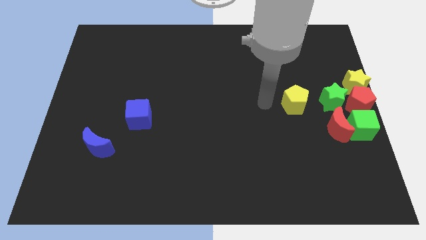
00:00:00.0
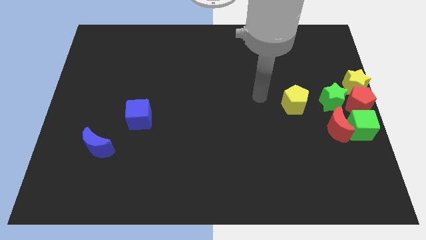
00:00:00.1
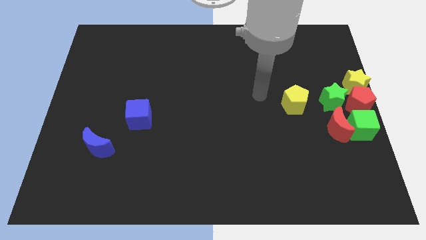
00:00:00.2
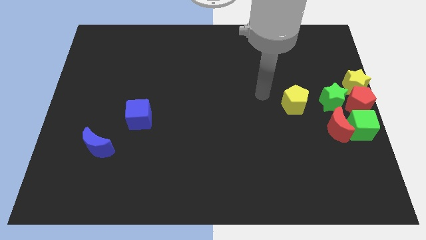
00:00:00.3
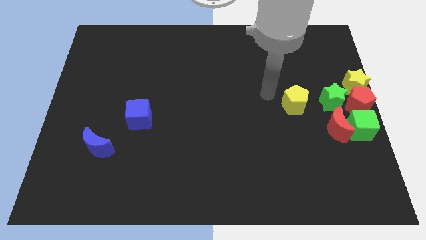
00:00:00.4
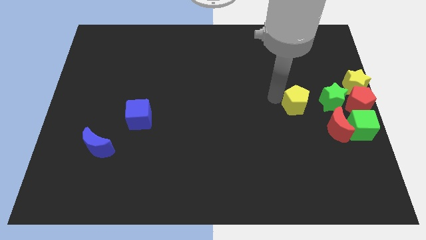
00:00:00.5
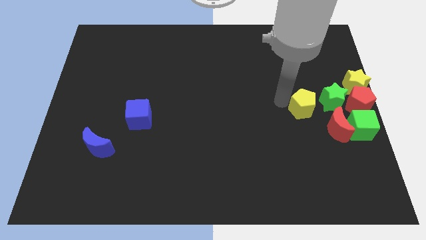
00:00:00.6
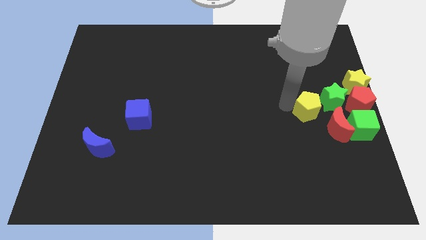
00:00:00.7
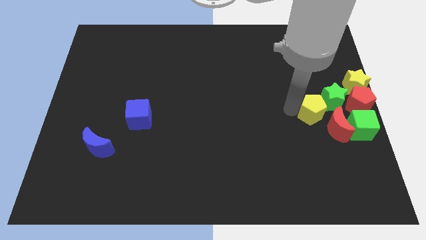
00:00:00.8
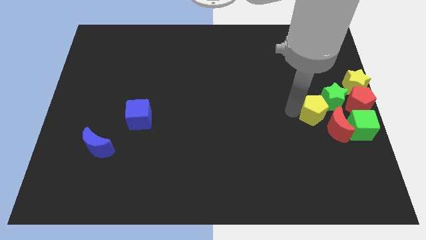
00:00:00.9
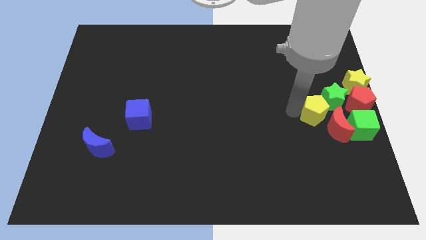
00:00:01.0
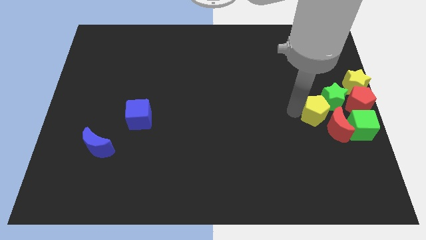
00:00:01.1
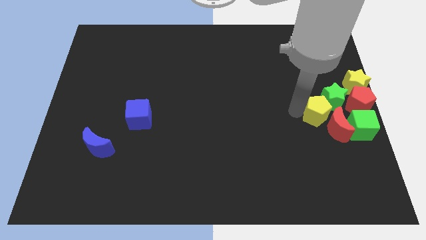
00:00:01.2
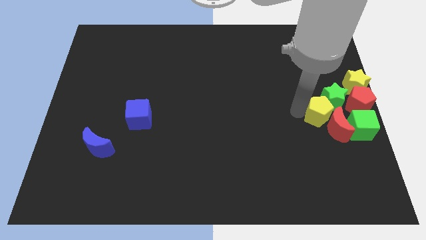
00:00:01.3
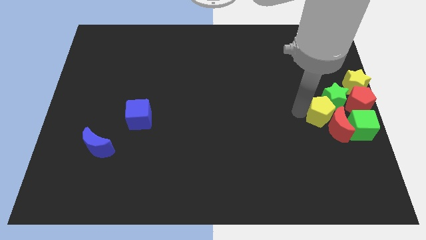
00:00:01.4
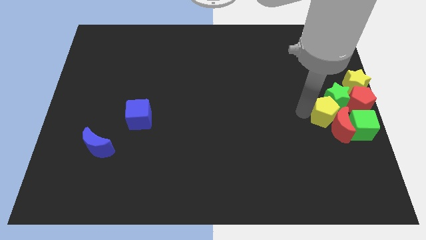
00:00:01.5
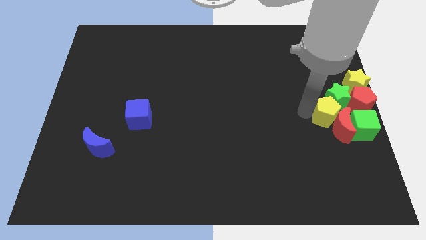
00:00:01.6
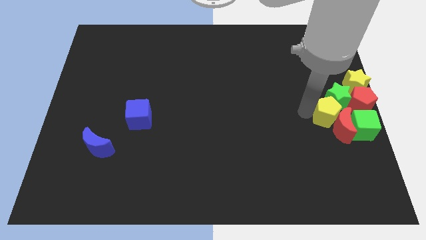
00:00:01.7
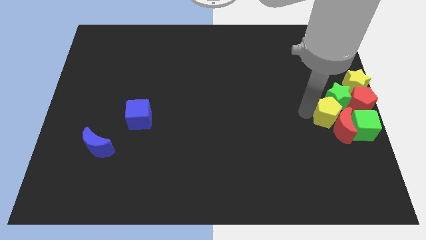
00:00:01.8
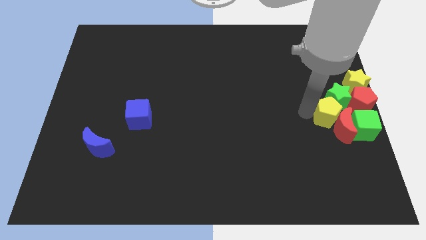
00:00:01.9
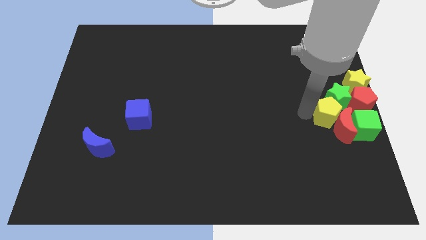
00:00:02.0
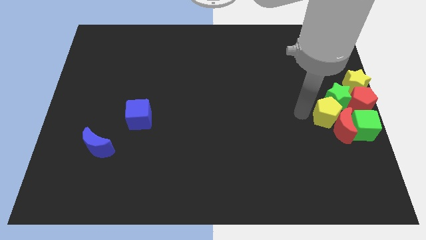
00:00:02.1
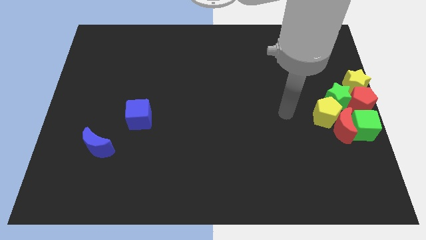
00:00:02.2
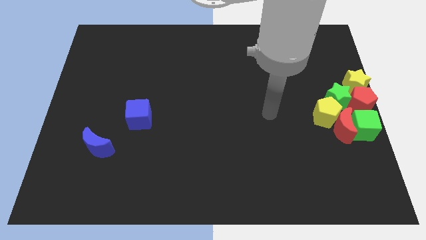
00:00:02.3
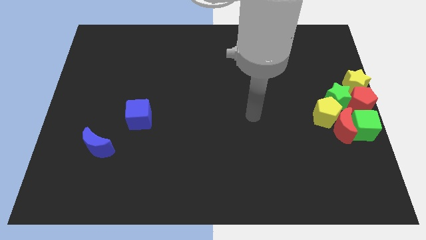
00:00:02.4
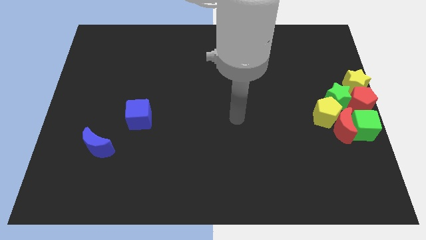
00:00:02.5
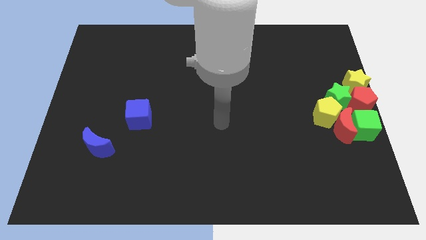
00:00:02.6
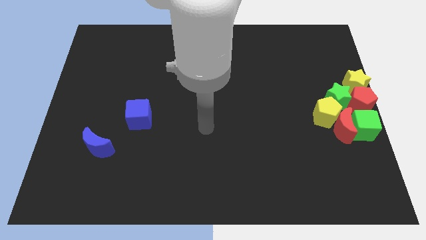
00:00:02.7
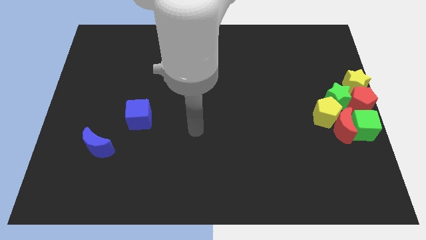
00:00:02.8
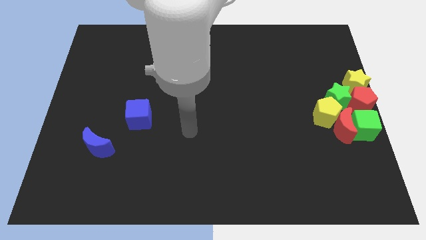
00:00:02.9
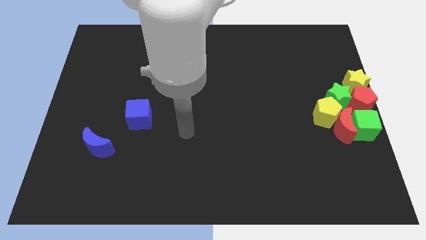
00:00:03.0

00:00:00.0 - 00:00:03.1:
push the yellow pentagon into the group of blocks

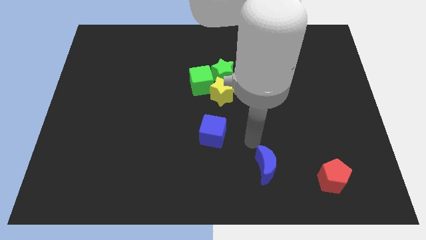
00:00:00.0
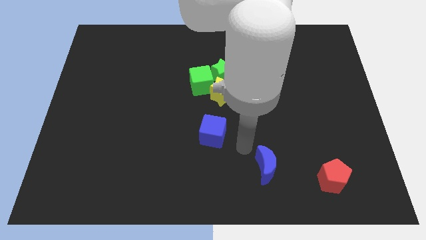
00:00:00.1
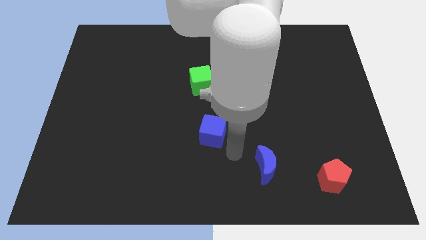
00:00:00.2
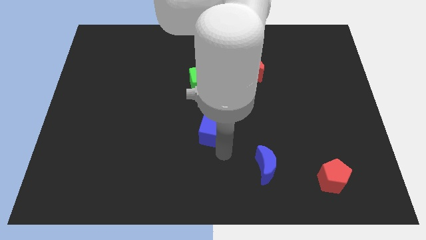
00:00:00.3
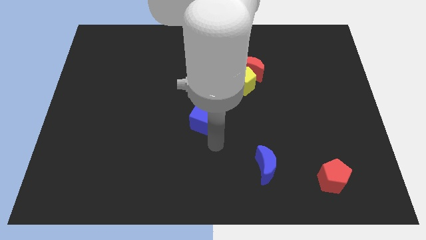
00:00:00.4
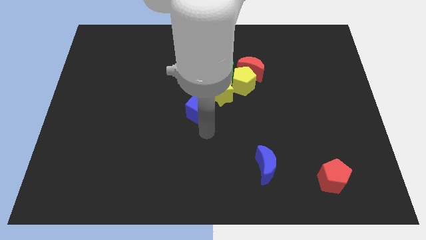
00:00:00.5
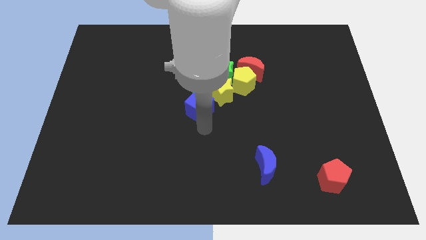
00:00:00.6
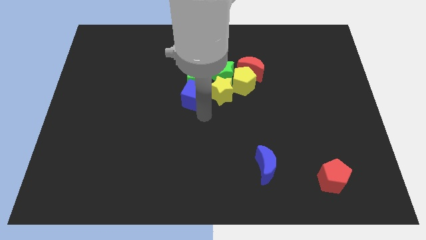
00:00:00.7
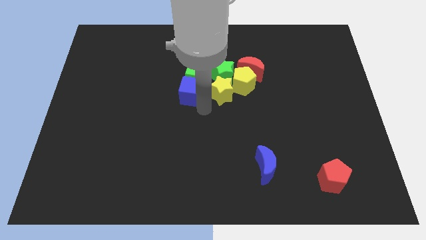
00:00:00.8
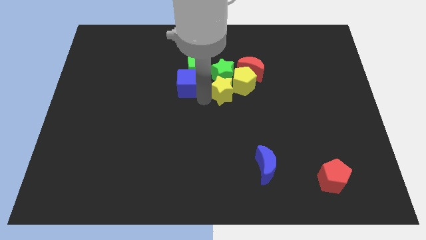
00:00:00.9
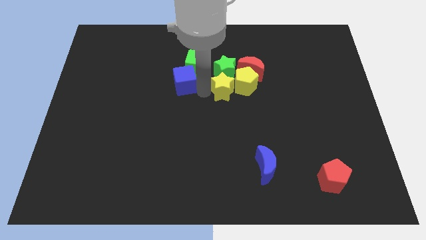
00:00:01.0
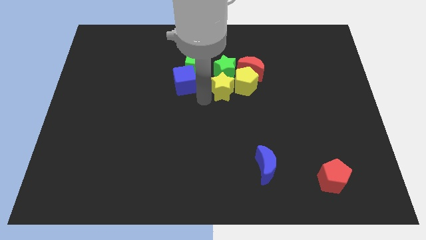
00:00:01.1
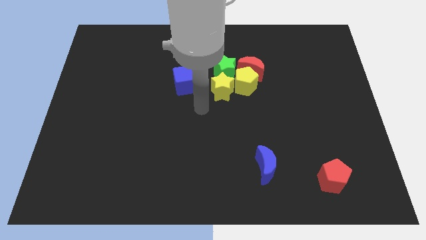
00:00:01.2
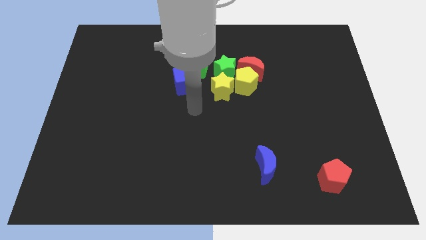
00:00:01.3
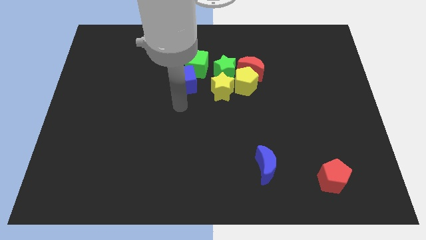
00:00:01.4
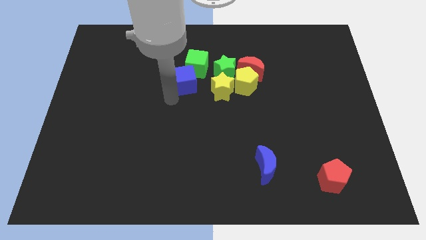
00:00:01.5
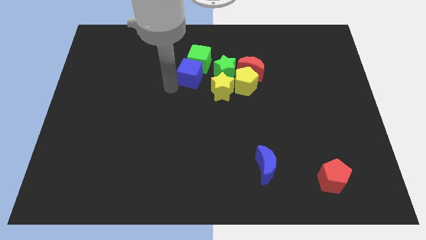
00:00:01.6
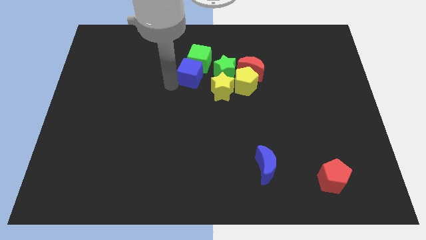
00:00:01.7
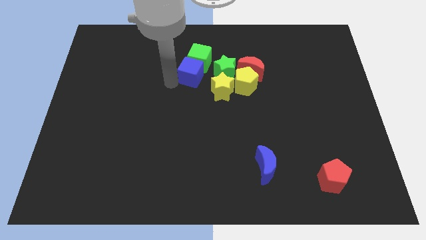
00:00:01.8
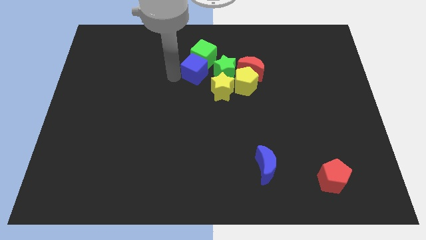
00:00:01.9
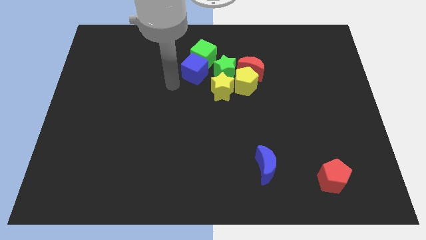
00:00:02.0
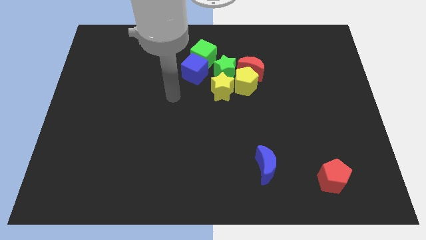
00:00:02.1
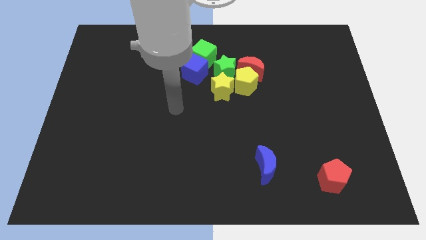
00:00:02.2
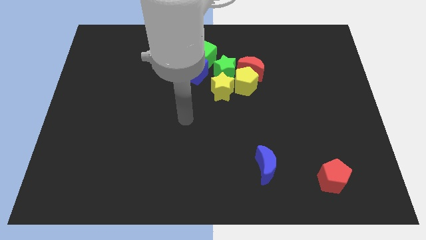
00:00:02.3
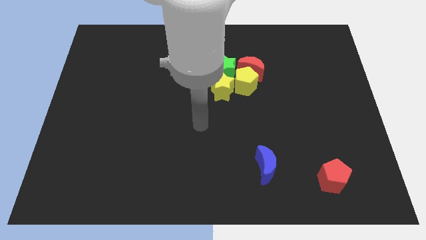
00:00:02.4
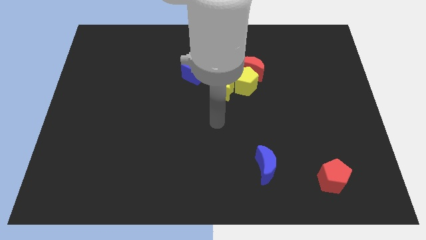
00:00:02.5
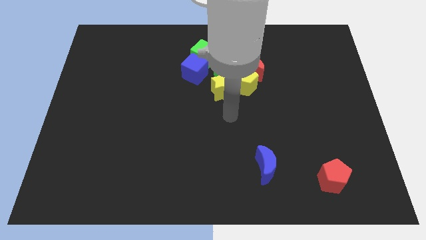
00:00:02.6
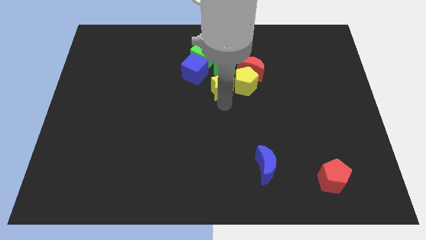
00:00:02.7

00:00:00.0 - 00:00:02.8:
place the arm at the bottom side of the yellow star

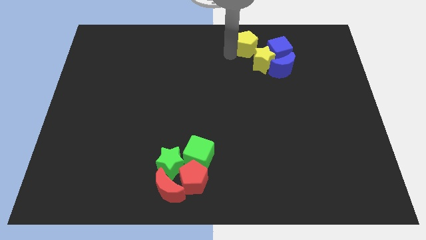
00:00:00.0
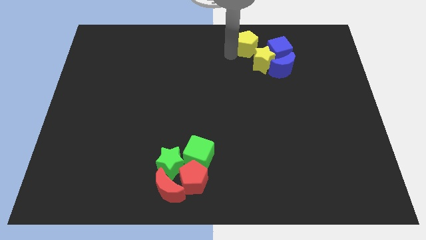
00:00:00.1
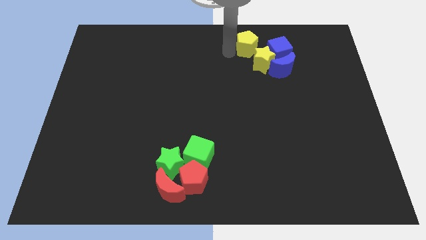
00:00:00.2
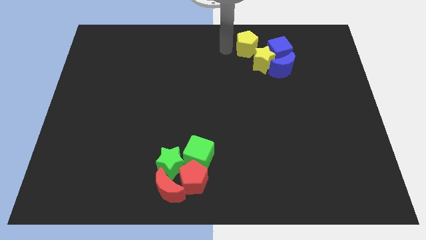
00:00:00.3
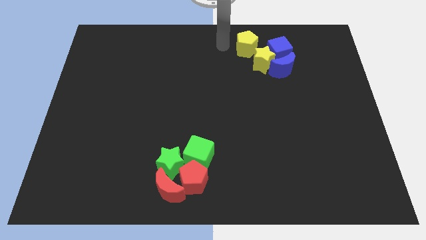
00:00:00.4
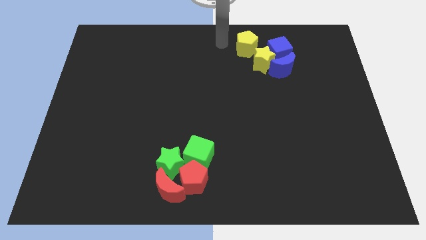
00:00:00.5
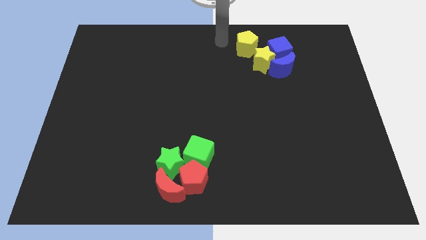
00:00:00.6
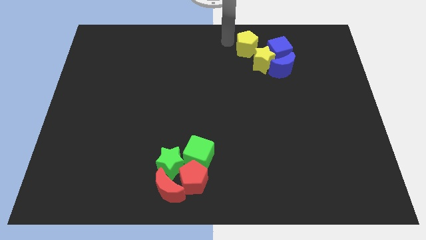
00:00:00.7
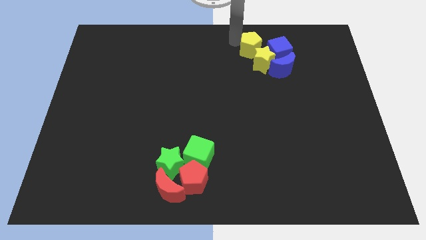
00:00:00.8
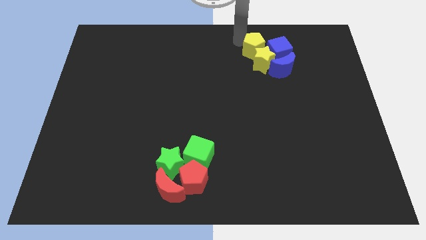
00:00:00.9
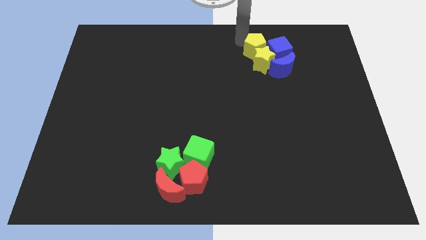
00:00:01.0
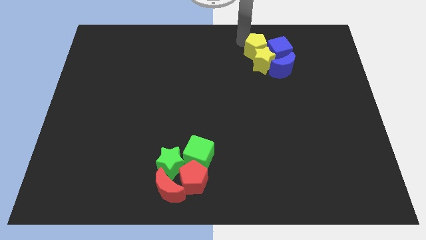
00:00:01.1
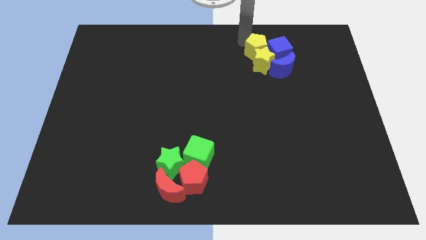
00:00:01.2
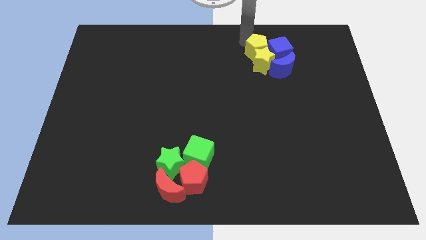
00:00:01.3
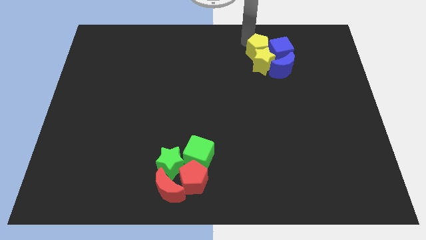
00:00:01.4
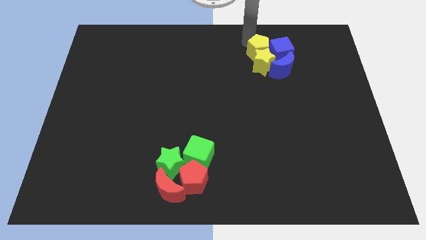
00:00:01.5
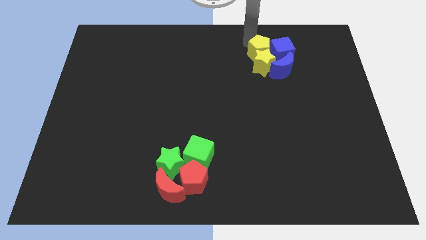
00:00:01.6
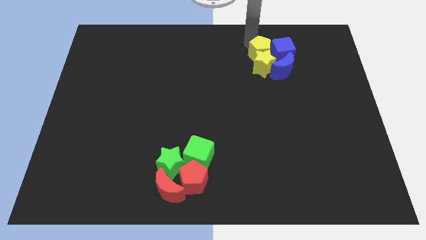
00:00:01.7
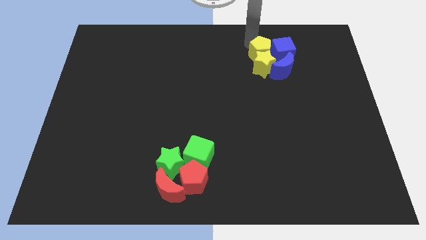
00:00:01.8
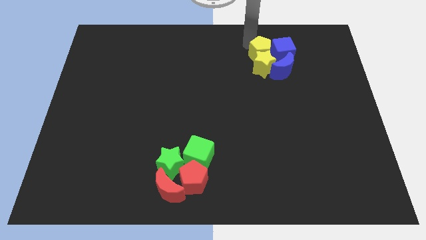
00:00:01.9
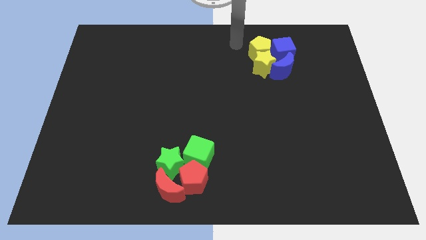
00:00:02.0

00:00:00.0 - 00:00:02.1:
move the yellow pentagon to the top of the yellow star

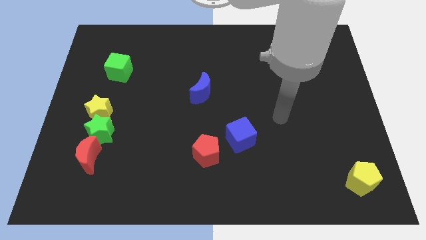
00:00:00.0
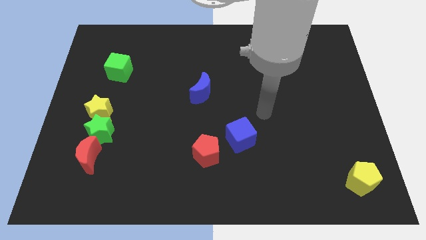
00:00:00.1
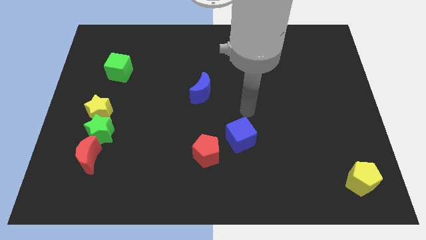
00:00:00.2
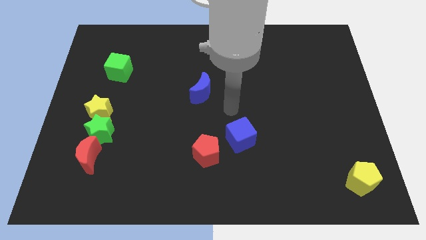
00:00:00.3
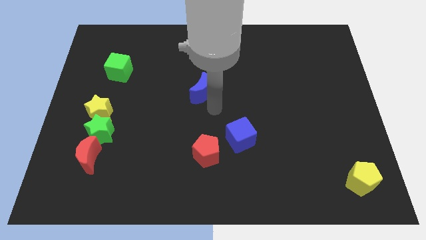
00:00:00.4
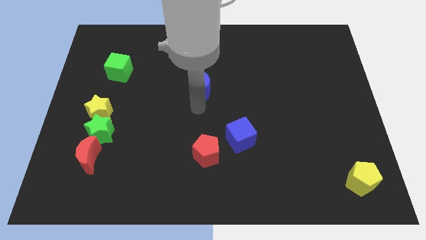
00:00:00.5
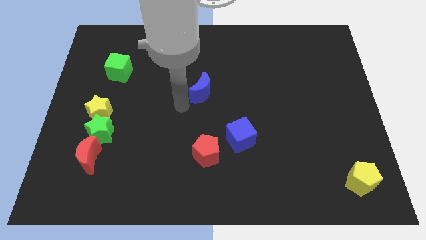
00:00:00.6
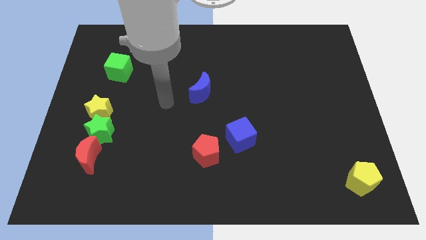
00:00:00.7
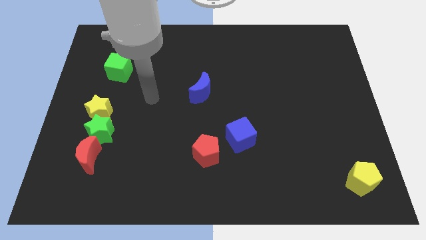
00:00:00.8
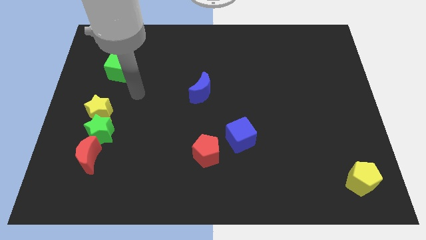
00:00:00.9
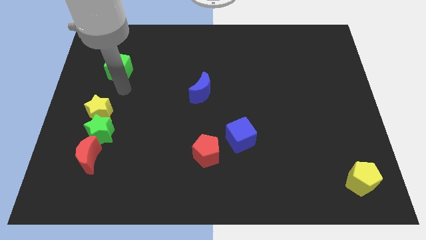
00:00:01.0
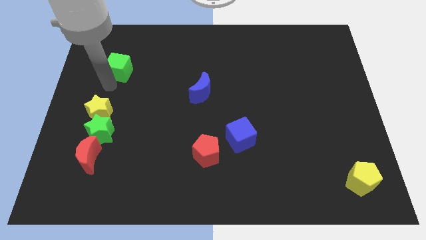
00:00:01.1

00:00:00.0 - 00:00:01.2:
place your hand to the bottom of green cube
